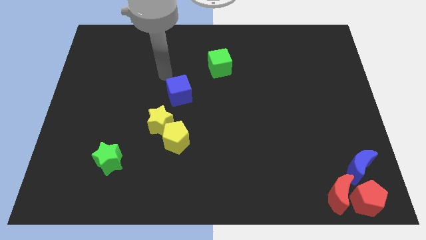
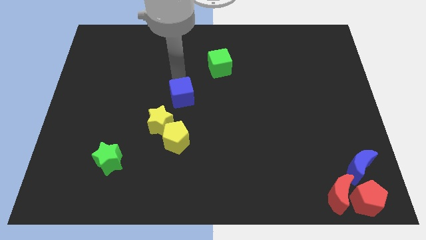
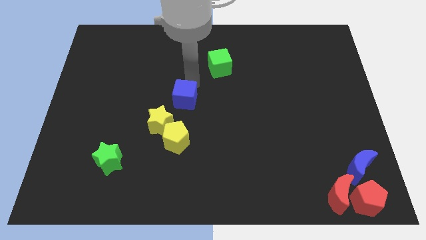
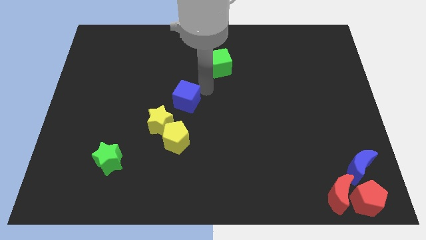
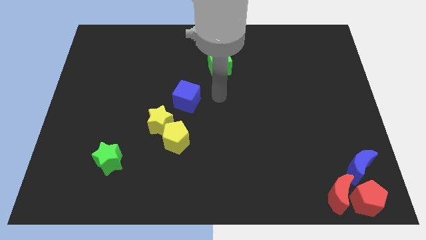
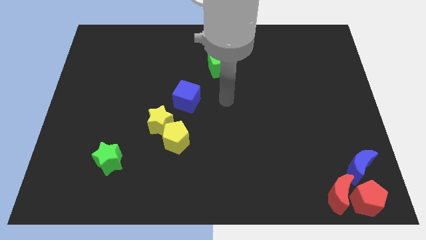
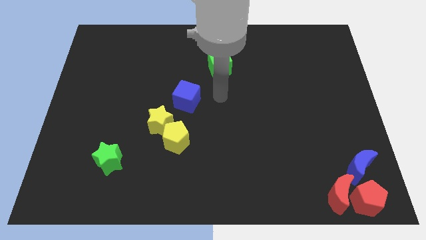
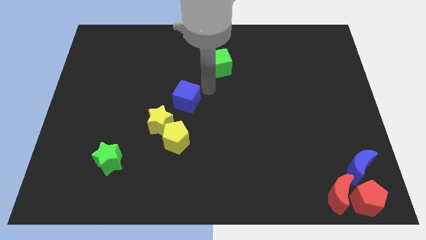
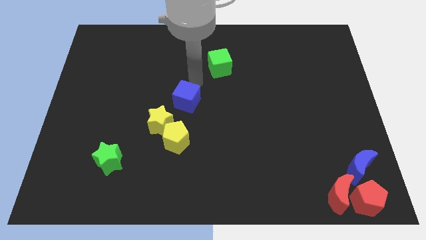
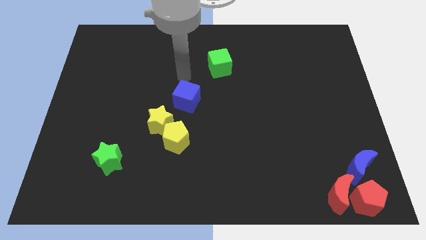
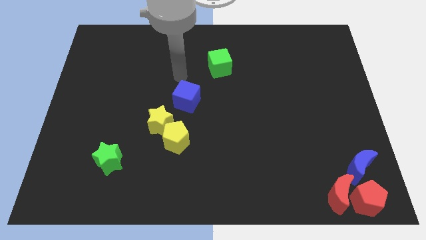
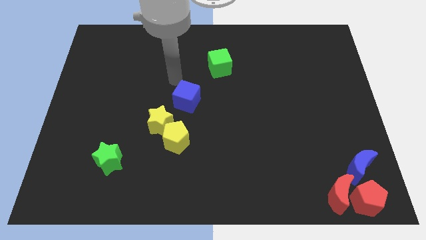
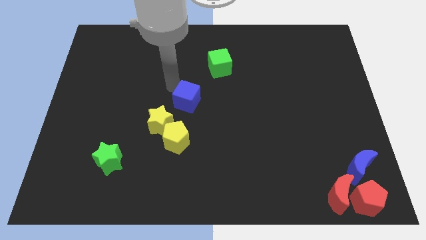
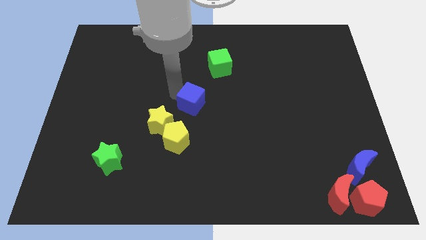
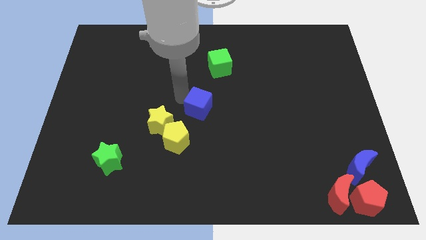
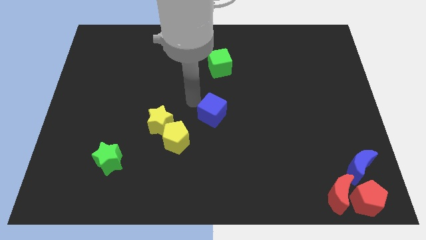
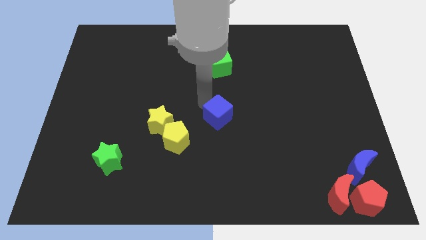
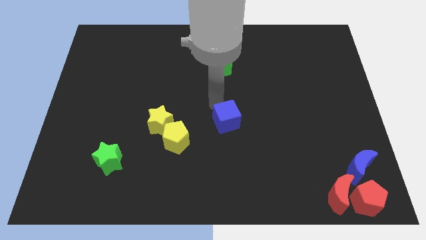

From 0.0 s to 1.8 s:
push the blue cube towards the center of the board

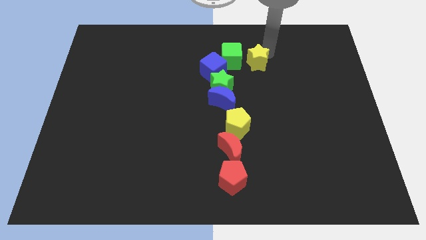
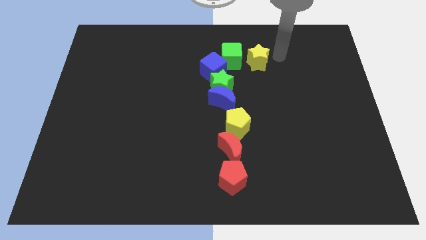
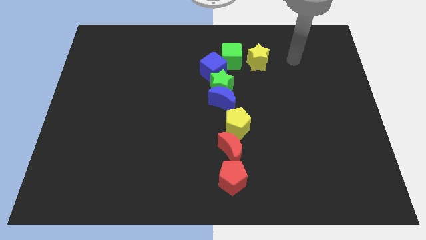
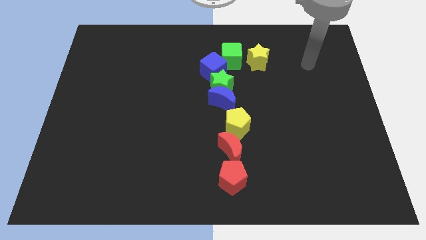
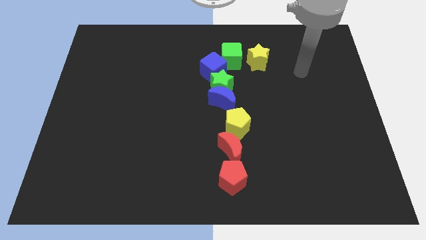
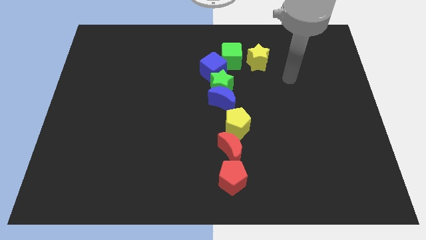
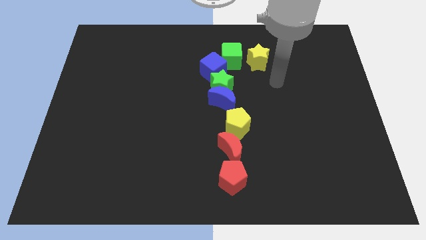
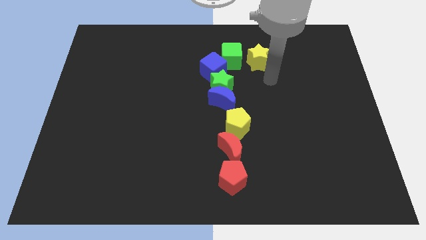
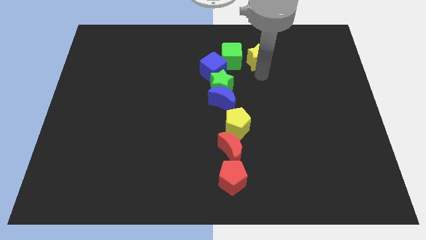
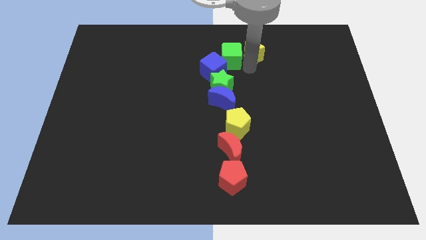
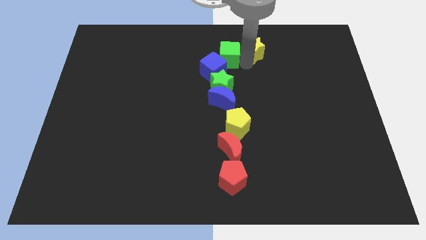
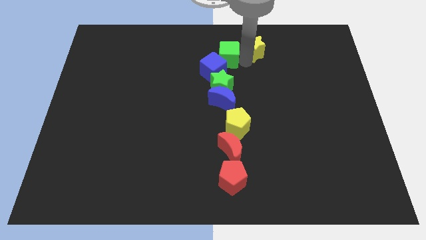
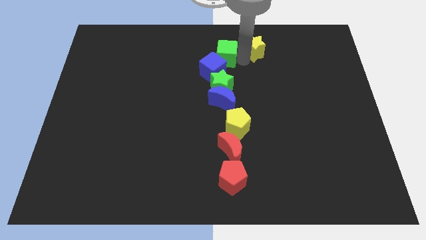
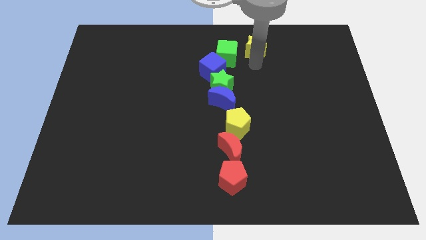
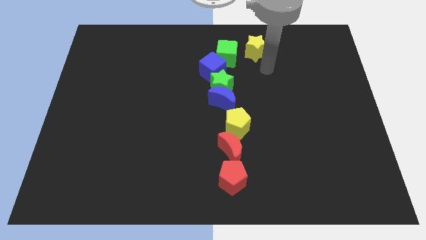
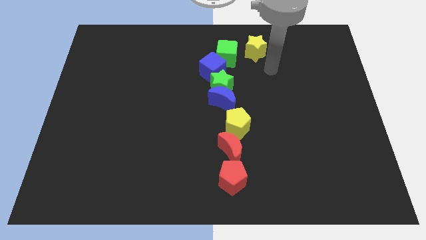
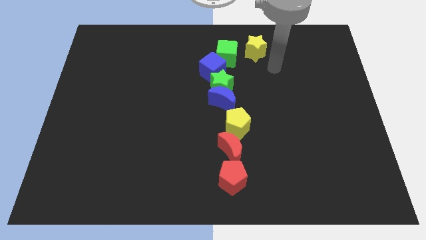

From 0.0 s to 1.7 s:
separate yellow star and the green cube

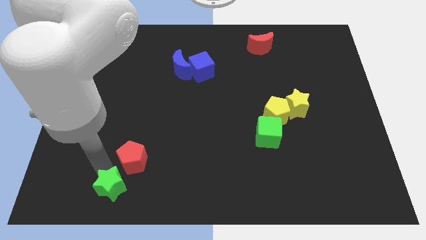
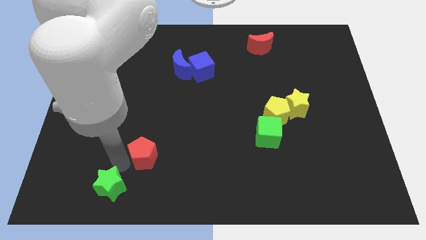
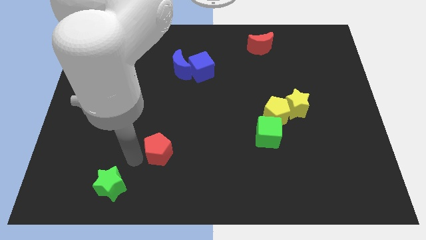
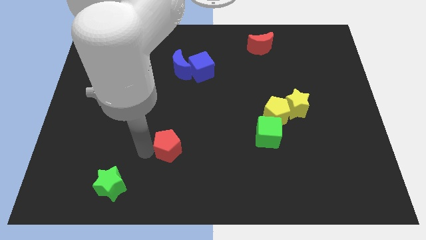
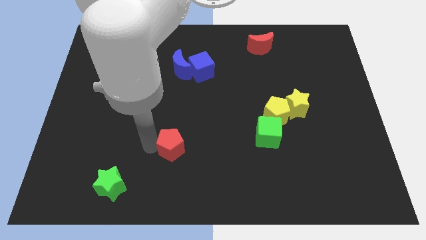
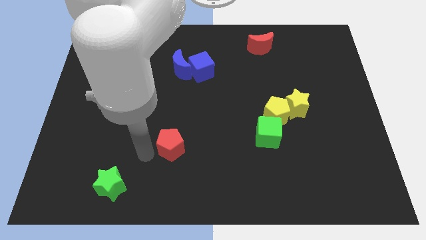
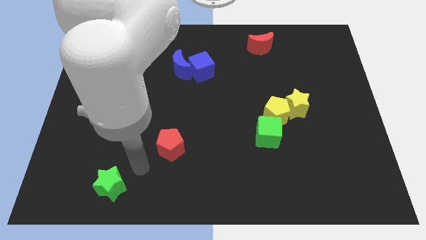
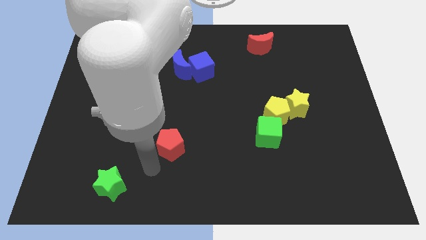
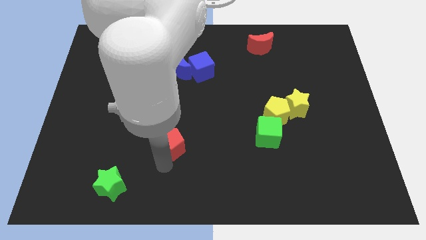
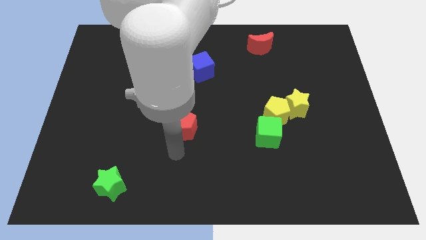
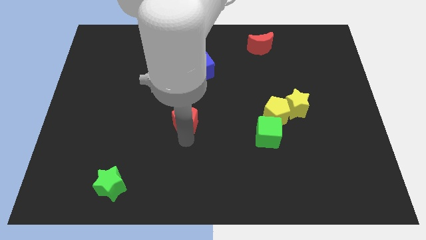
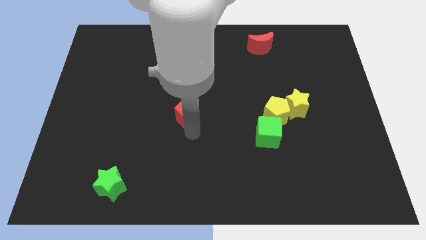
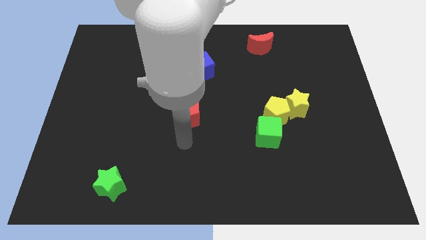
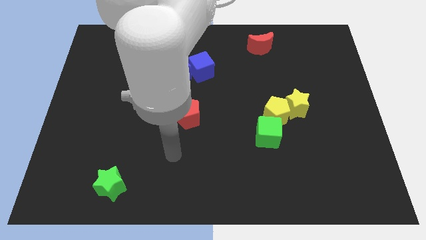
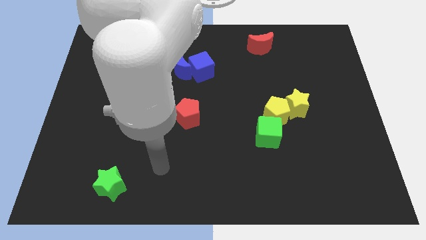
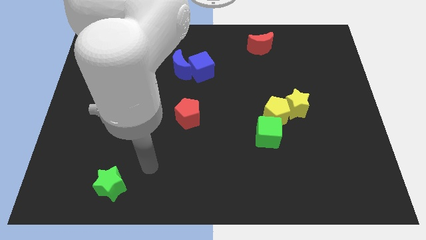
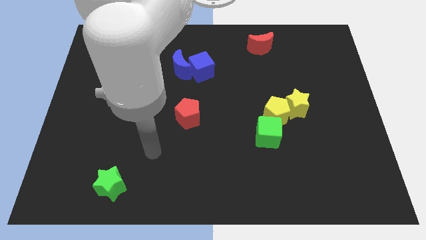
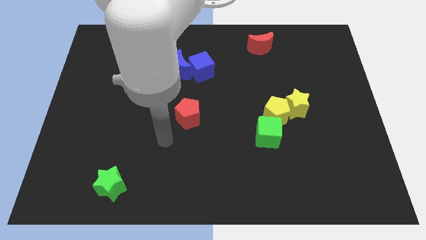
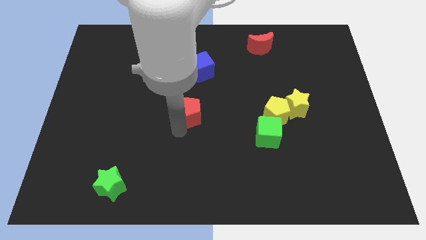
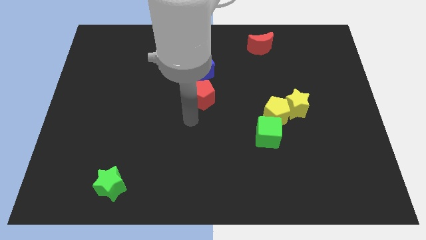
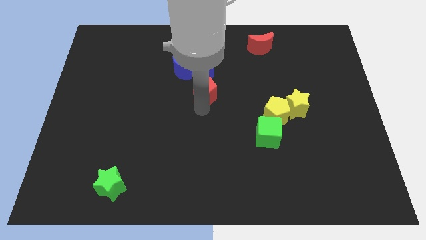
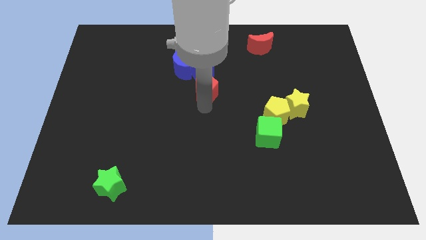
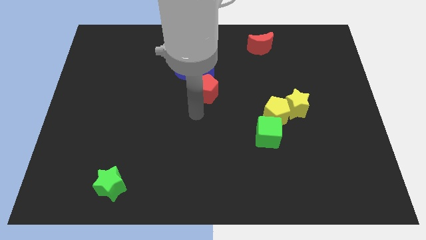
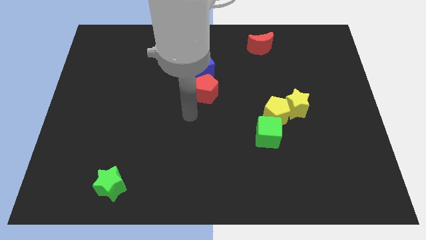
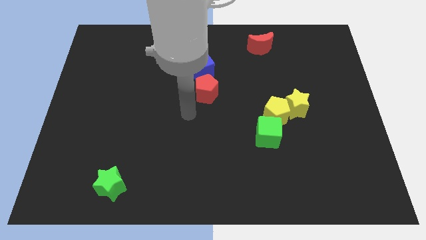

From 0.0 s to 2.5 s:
put the red pentagon below the blue cube

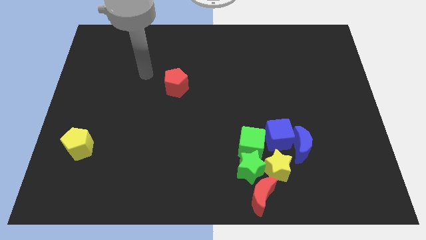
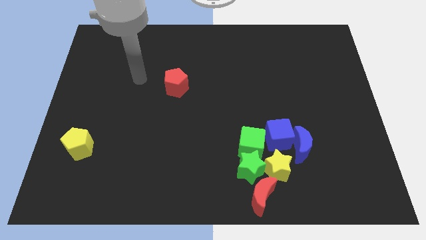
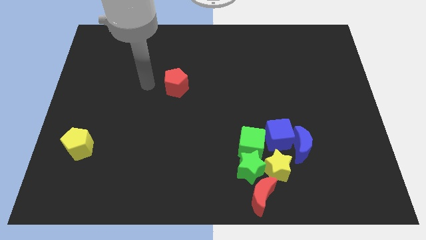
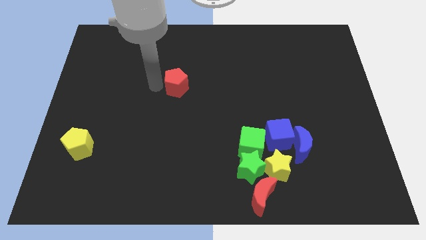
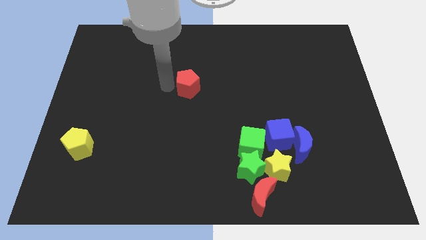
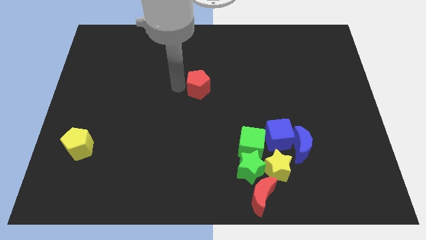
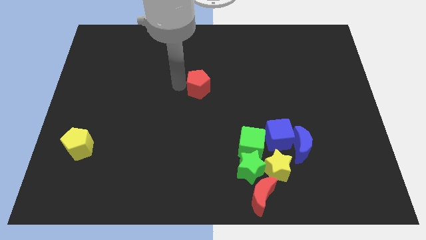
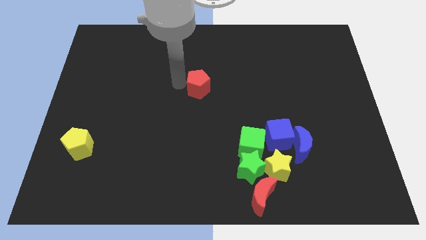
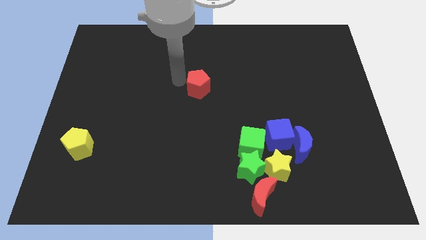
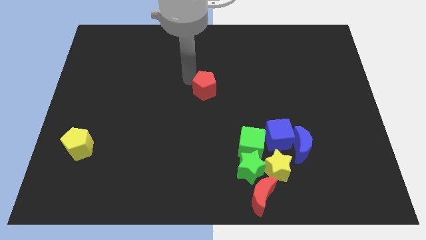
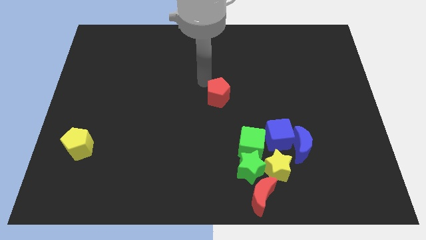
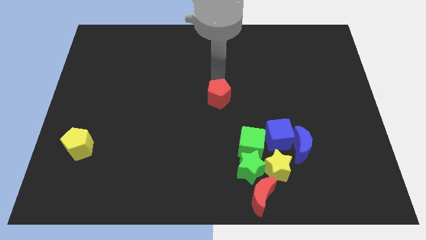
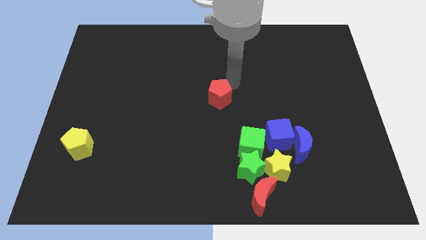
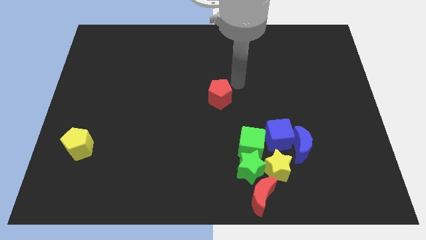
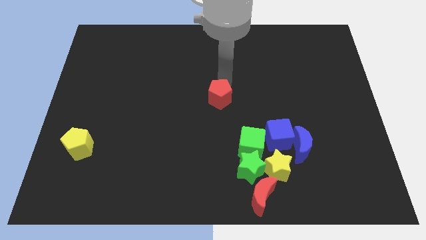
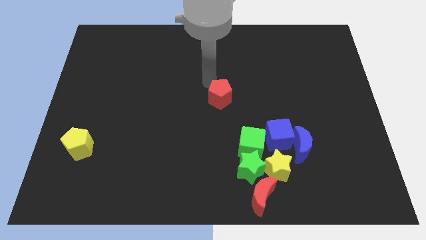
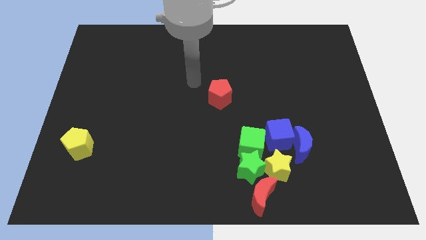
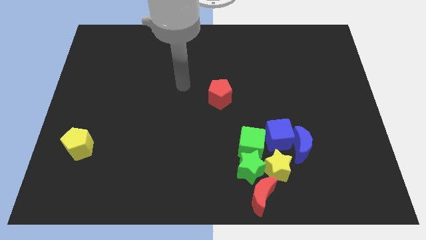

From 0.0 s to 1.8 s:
place the red pentagon at the center of the board

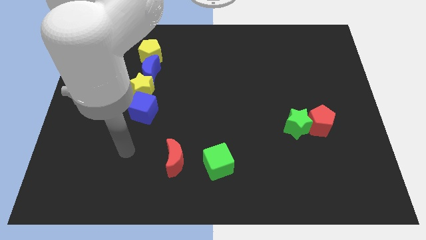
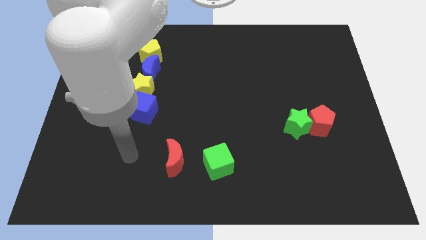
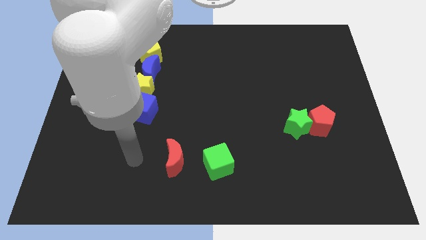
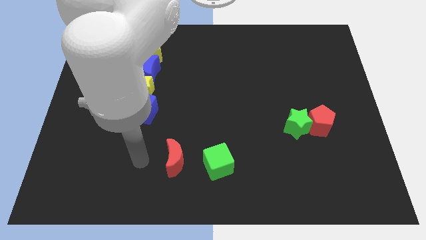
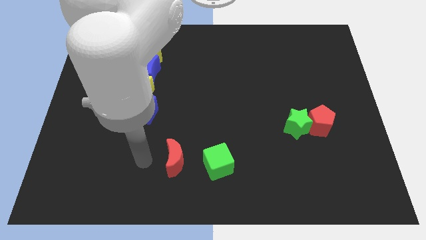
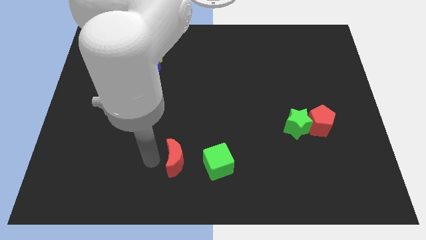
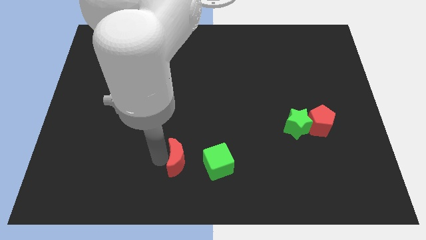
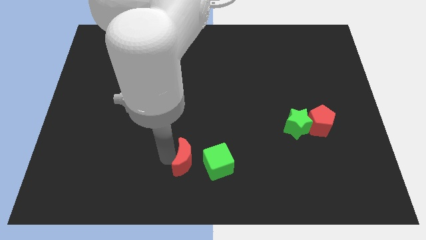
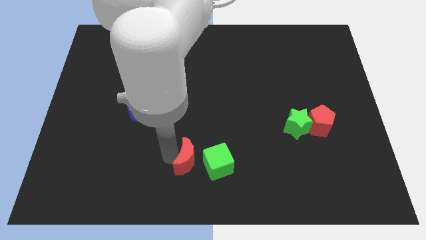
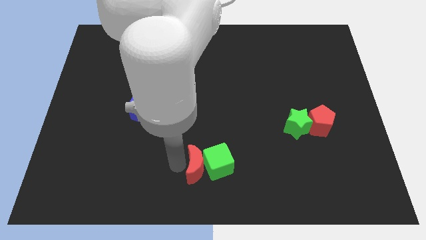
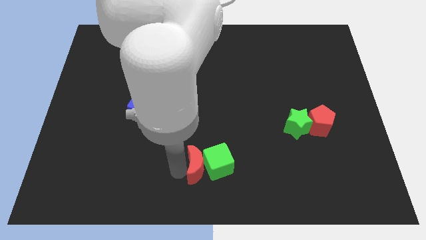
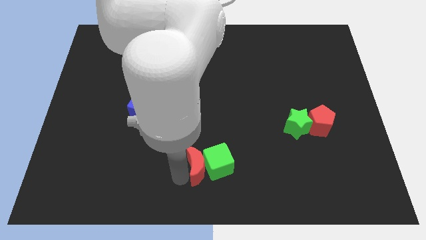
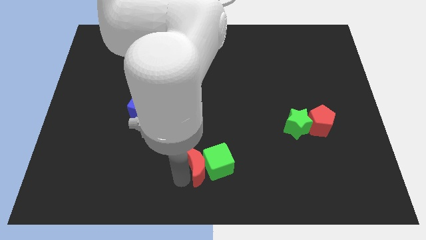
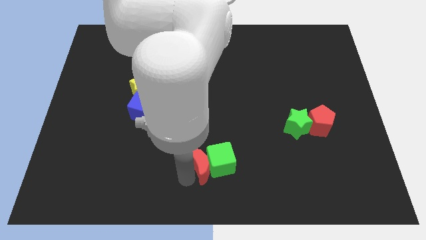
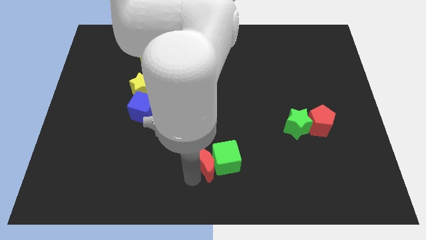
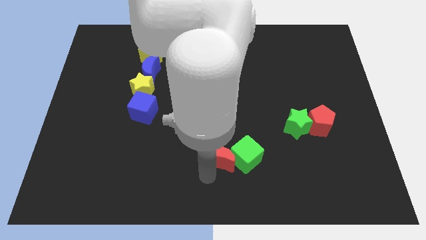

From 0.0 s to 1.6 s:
push the red crescent into the green cube
